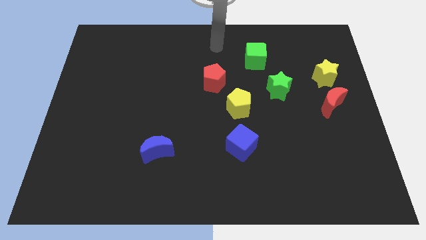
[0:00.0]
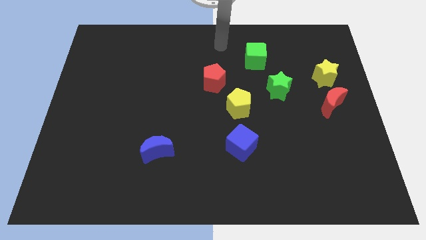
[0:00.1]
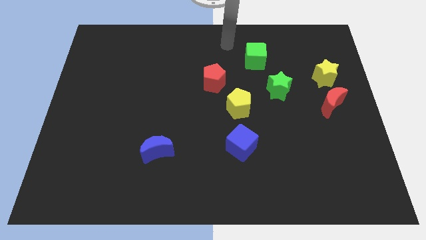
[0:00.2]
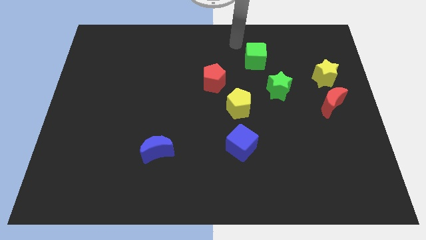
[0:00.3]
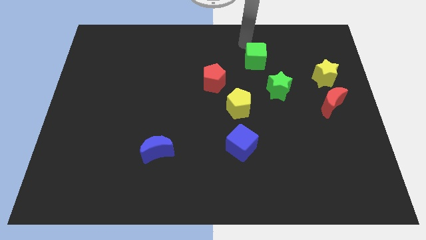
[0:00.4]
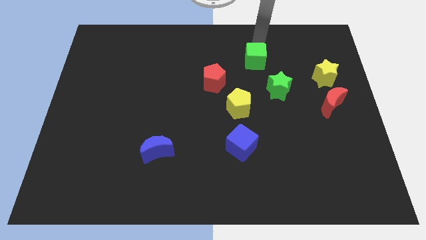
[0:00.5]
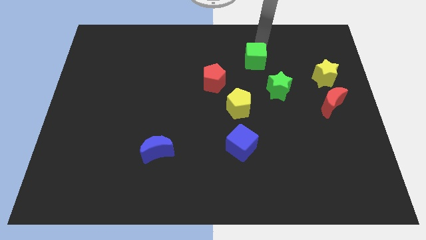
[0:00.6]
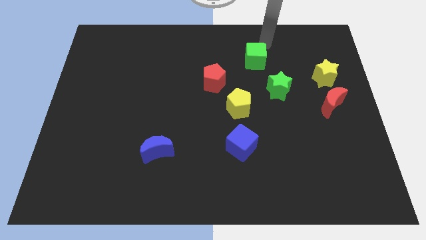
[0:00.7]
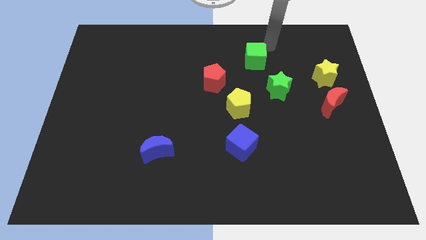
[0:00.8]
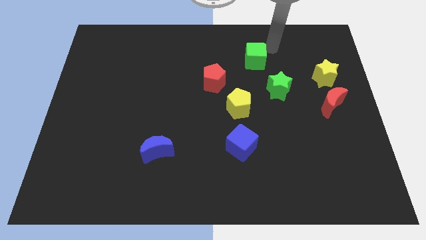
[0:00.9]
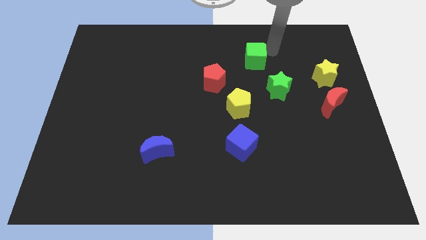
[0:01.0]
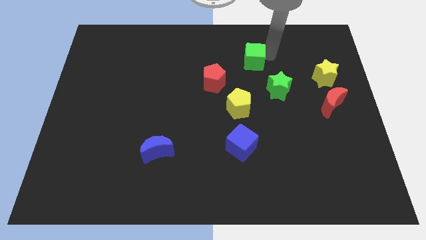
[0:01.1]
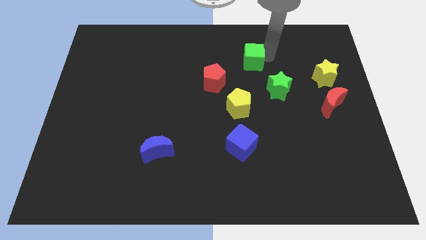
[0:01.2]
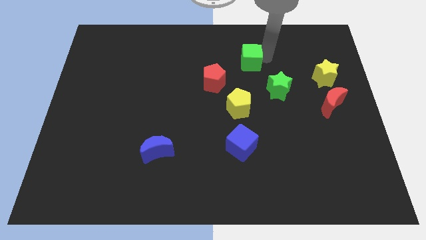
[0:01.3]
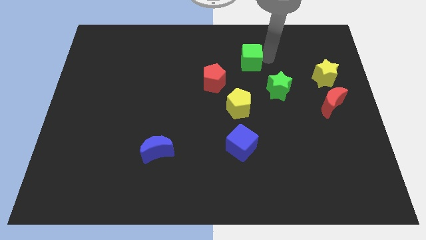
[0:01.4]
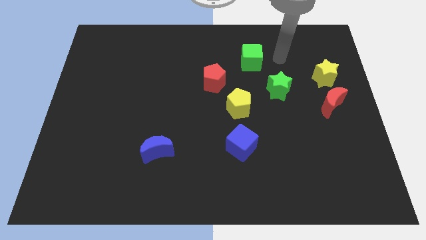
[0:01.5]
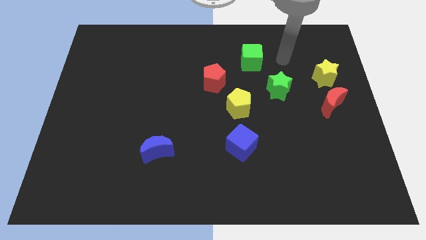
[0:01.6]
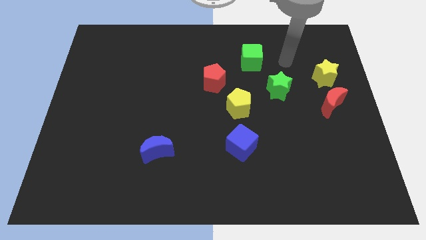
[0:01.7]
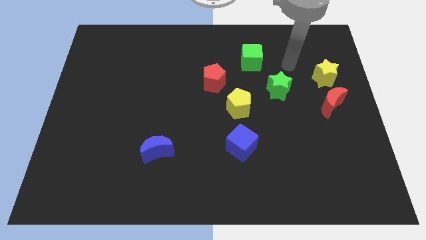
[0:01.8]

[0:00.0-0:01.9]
slightly push the green cube

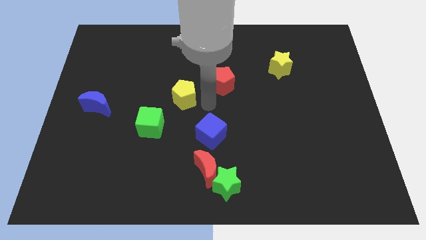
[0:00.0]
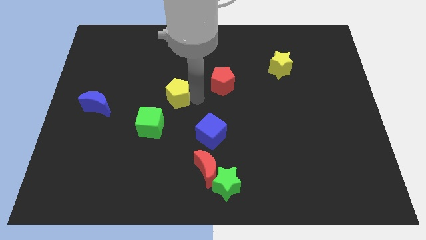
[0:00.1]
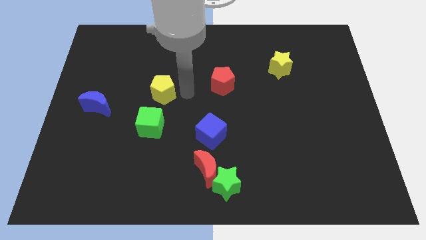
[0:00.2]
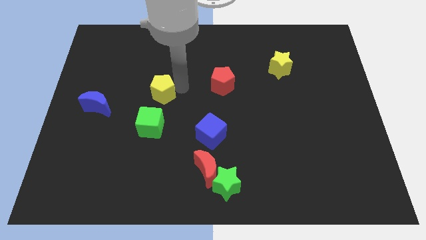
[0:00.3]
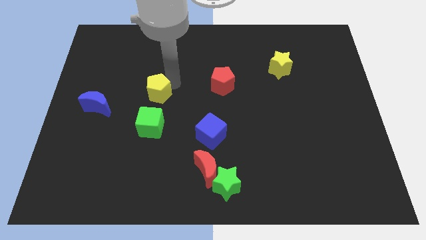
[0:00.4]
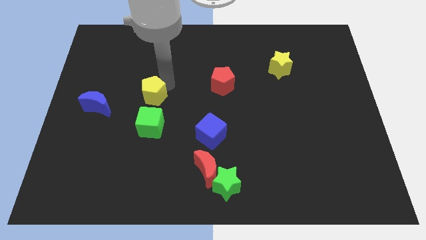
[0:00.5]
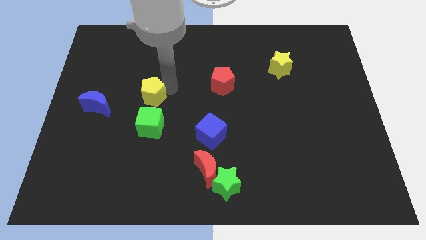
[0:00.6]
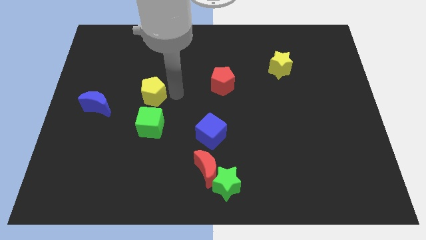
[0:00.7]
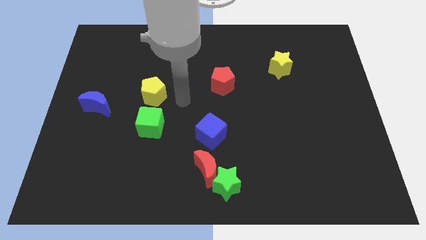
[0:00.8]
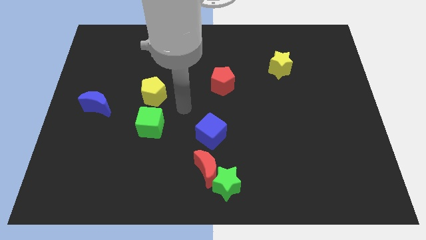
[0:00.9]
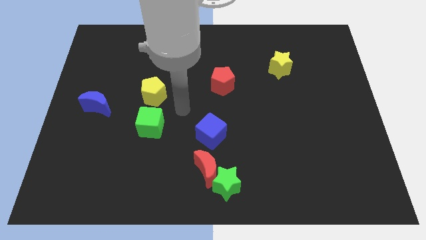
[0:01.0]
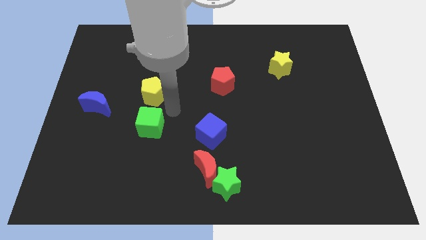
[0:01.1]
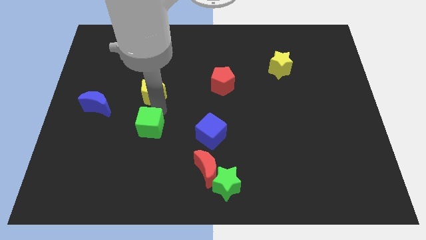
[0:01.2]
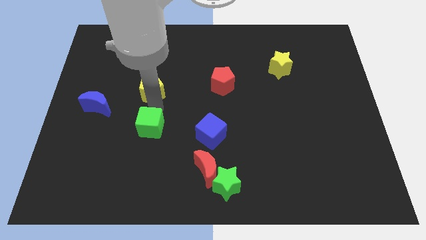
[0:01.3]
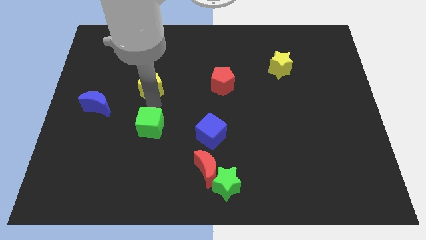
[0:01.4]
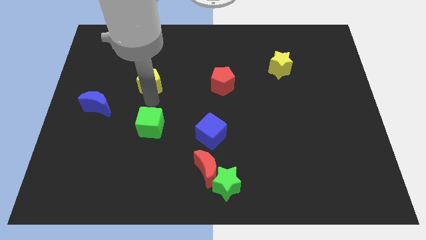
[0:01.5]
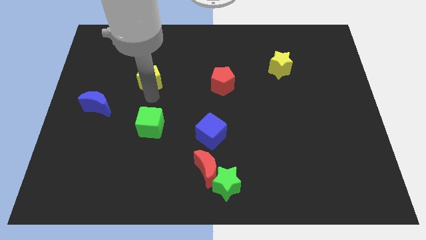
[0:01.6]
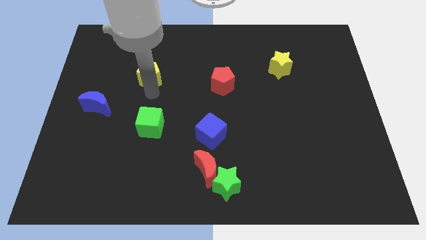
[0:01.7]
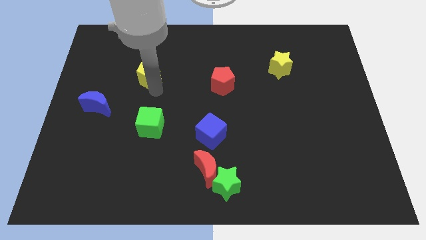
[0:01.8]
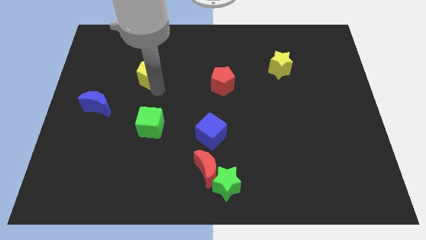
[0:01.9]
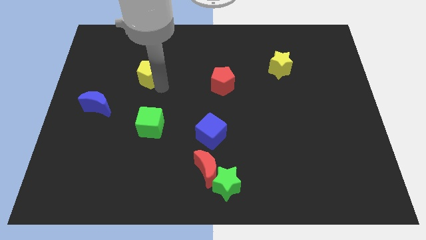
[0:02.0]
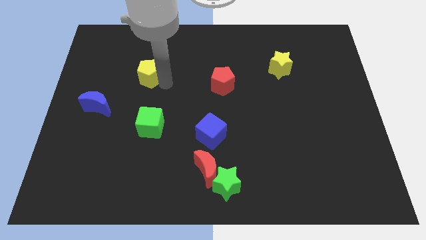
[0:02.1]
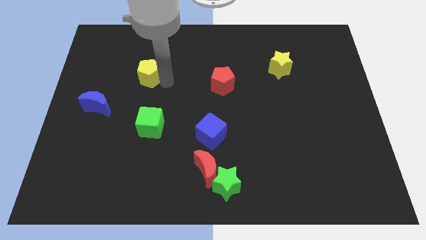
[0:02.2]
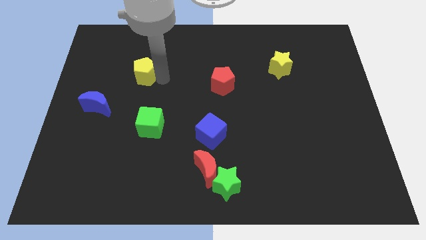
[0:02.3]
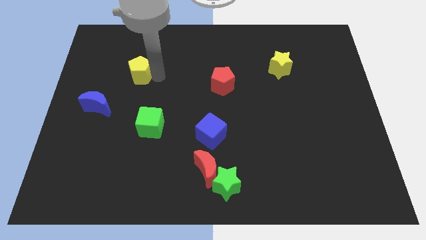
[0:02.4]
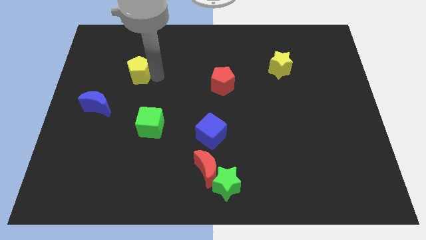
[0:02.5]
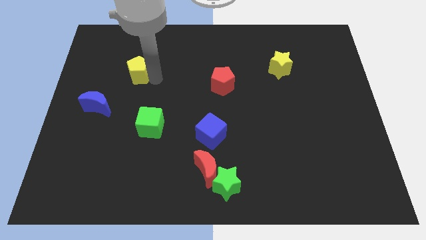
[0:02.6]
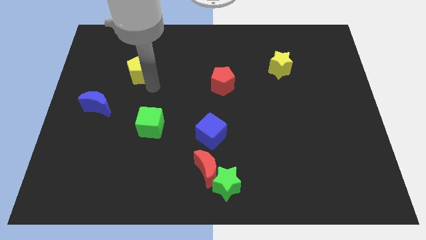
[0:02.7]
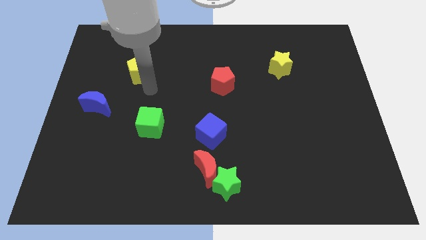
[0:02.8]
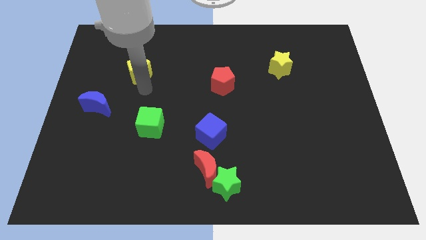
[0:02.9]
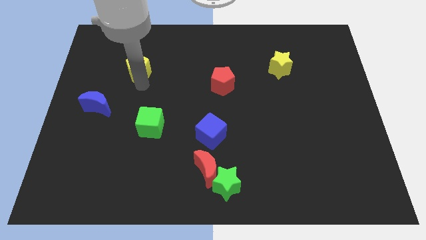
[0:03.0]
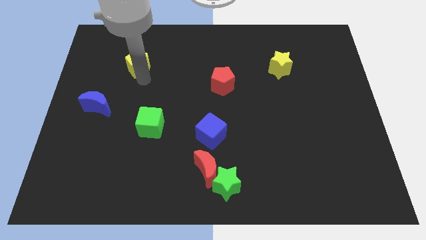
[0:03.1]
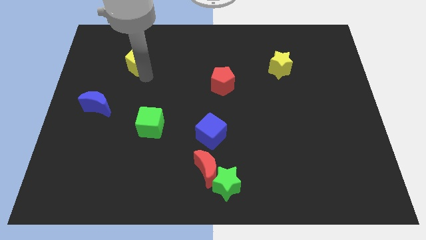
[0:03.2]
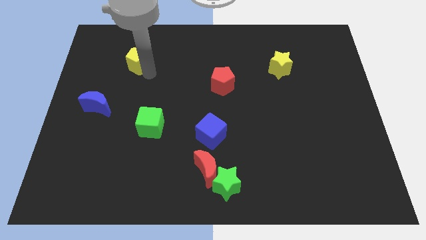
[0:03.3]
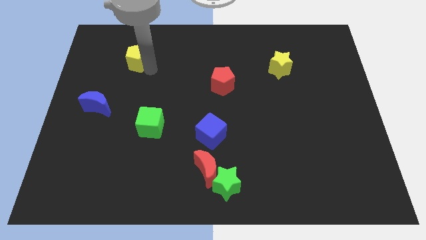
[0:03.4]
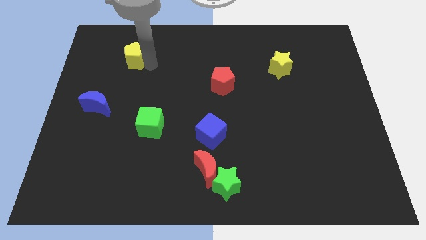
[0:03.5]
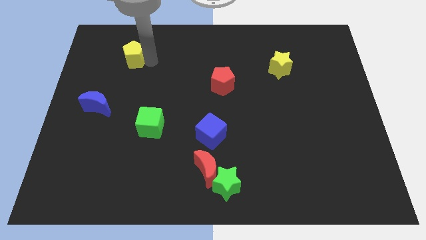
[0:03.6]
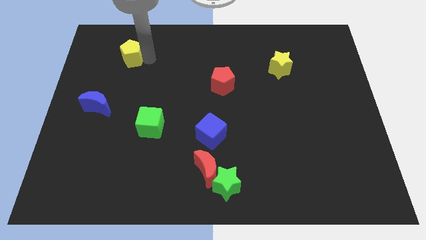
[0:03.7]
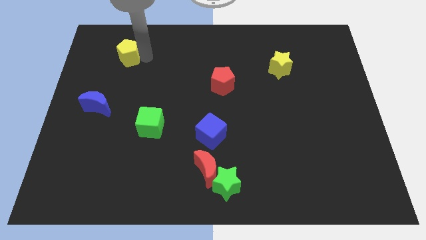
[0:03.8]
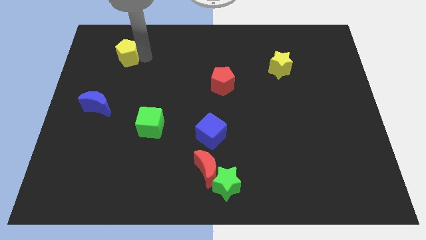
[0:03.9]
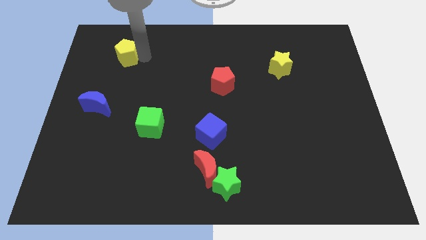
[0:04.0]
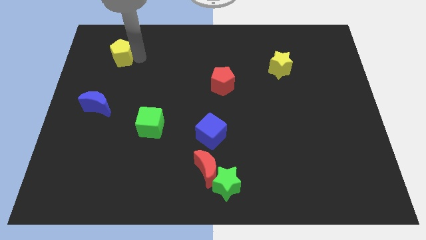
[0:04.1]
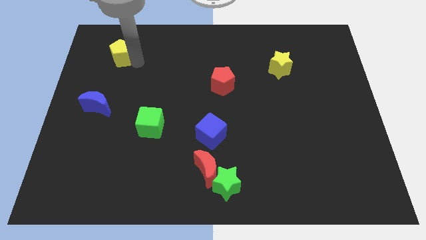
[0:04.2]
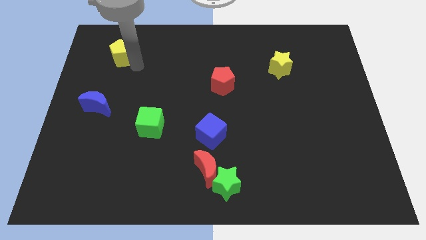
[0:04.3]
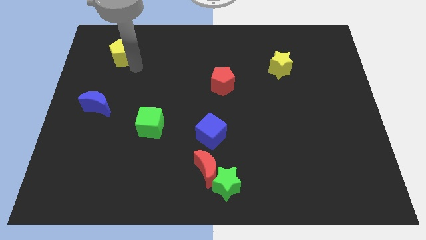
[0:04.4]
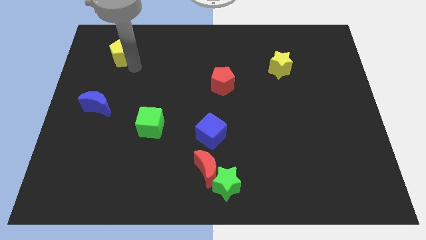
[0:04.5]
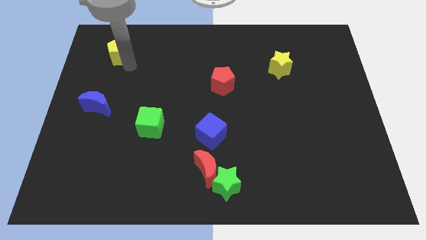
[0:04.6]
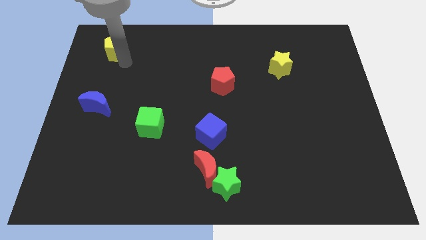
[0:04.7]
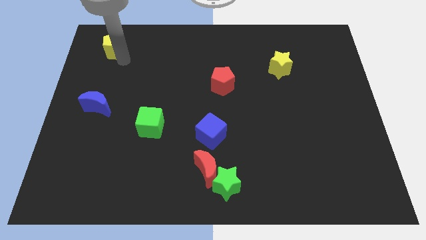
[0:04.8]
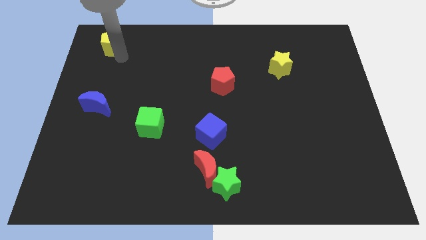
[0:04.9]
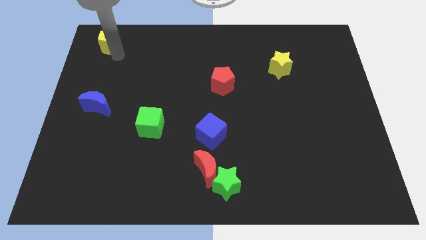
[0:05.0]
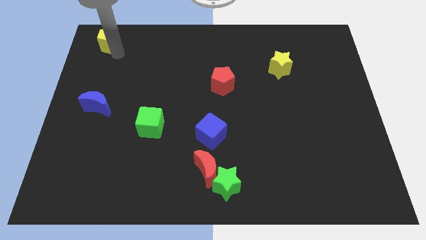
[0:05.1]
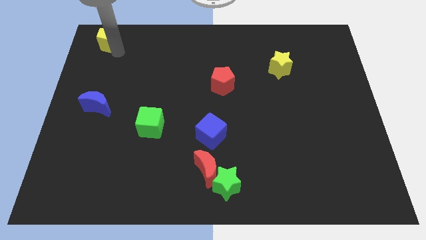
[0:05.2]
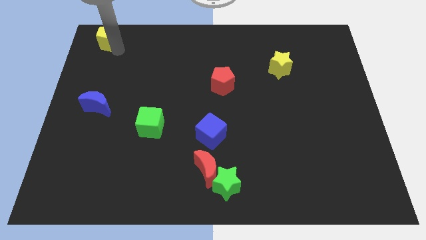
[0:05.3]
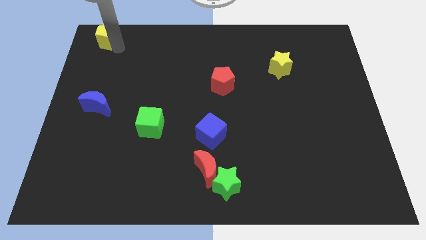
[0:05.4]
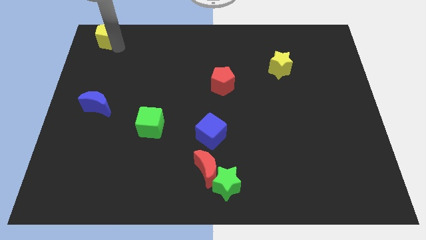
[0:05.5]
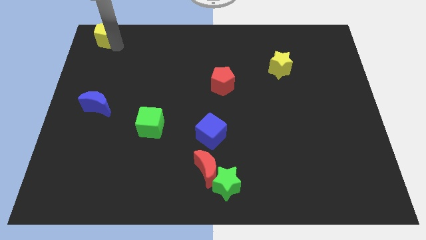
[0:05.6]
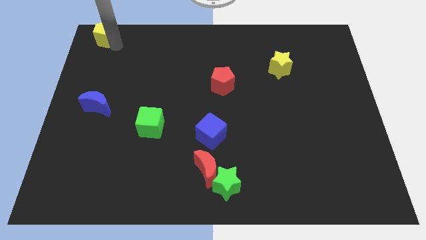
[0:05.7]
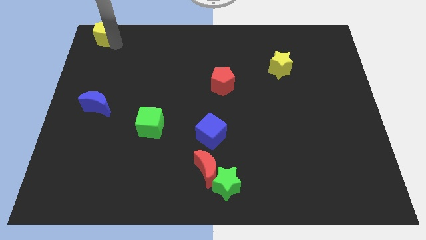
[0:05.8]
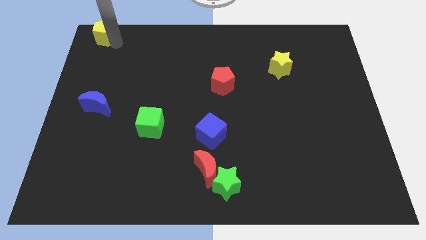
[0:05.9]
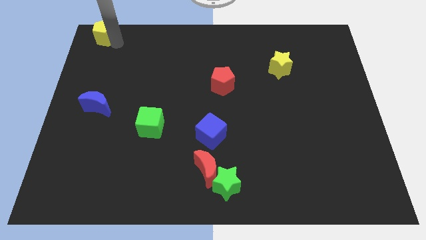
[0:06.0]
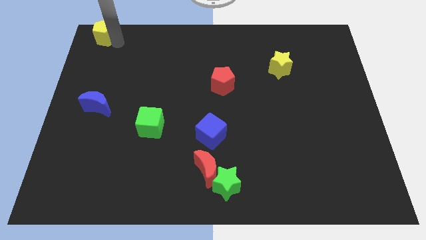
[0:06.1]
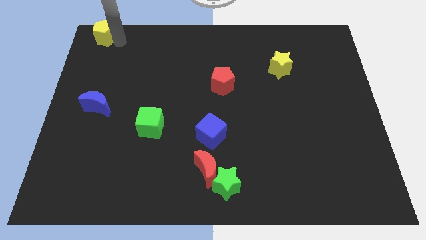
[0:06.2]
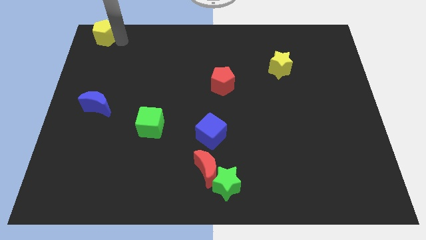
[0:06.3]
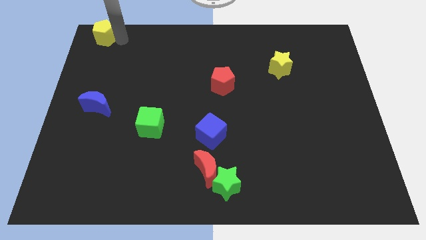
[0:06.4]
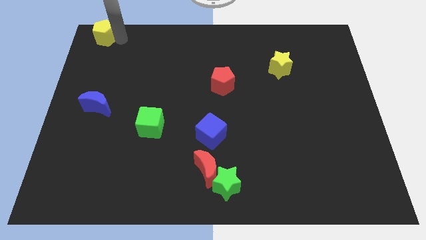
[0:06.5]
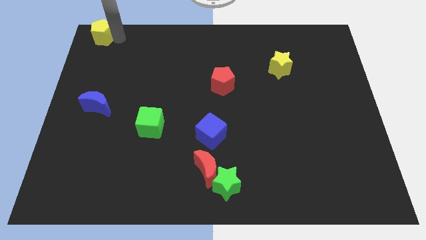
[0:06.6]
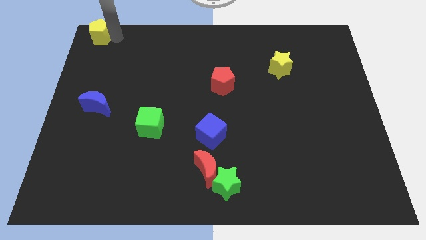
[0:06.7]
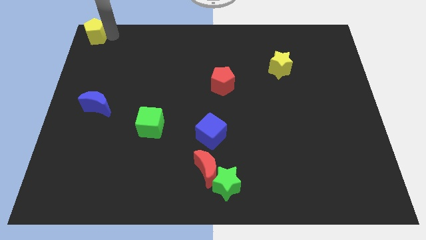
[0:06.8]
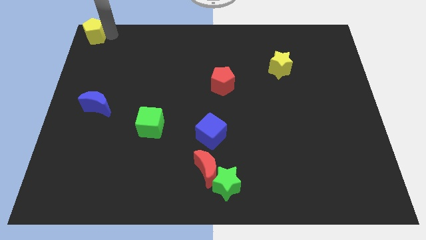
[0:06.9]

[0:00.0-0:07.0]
push the yellow pentagon towards the top left corner of the board
